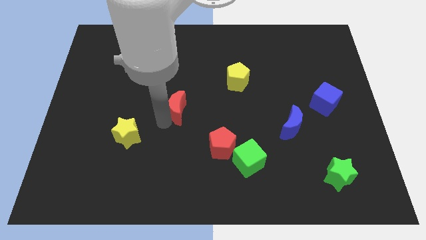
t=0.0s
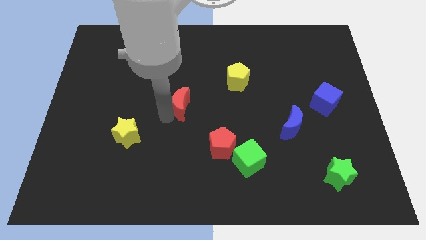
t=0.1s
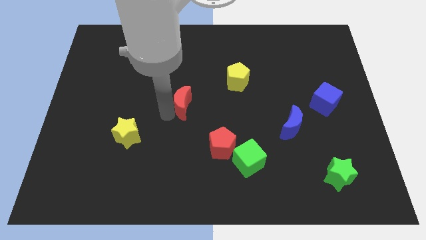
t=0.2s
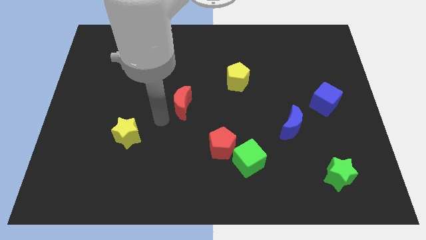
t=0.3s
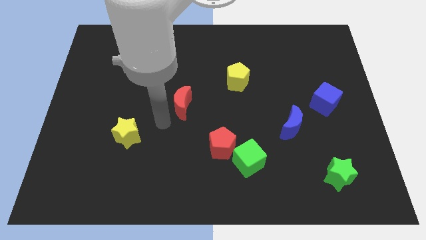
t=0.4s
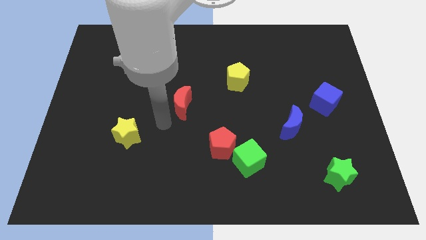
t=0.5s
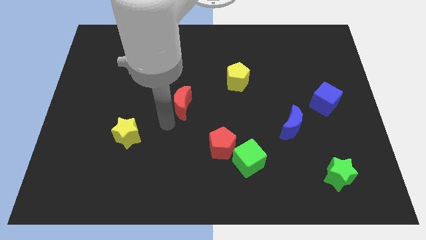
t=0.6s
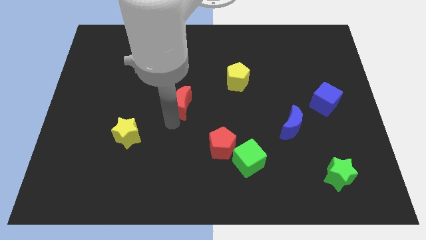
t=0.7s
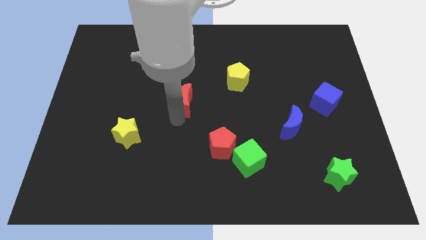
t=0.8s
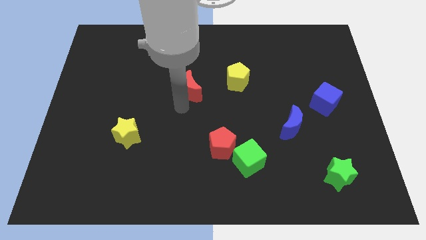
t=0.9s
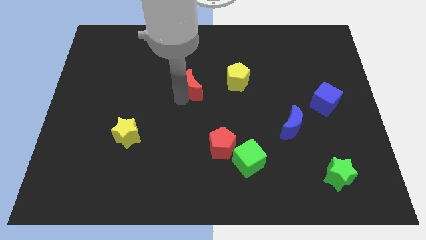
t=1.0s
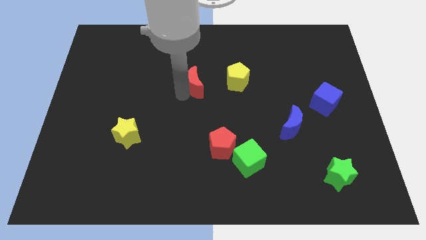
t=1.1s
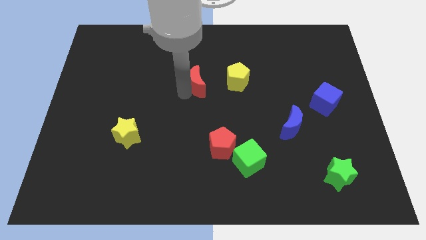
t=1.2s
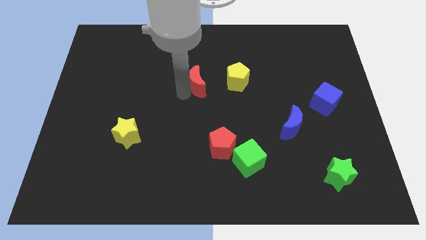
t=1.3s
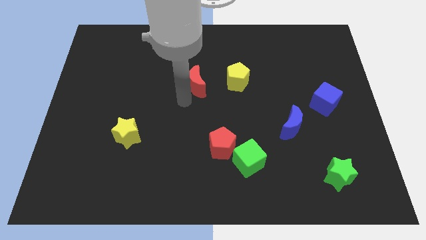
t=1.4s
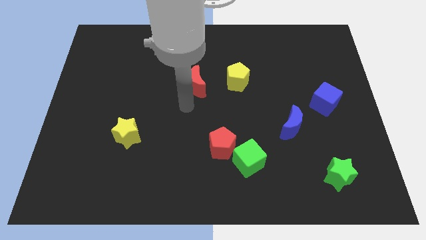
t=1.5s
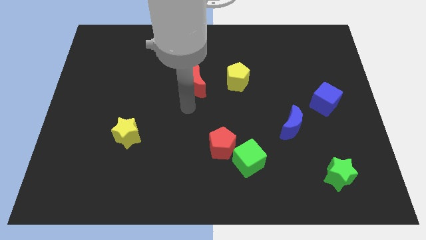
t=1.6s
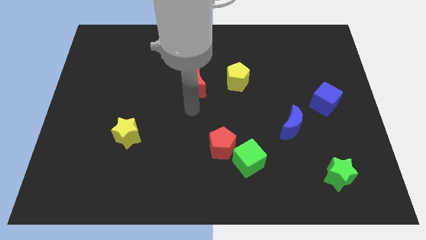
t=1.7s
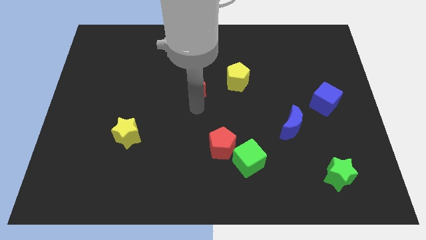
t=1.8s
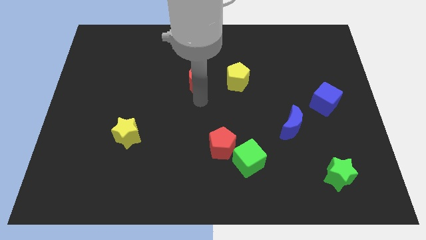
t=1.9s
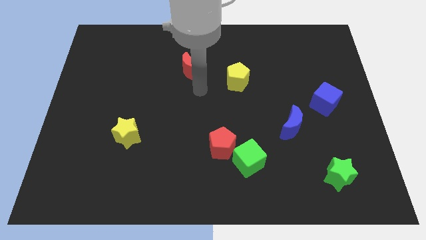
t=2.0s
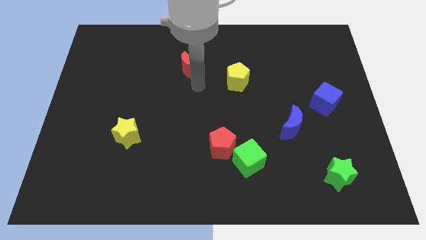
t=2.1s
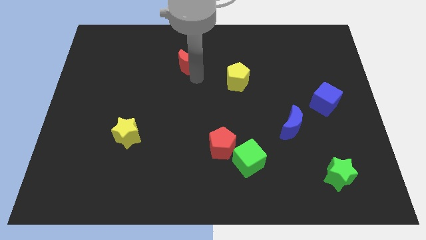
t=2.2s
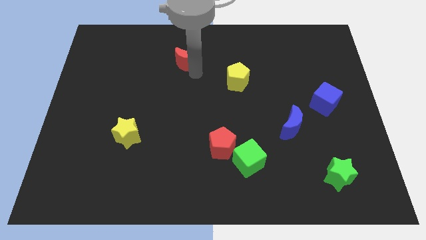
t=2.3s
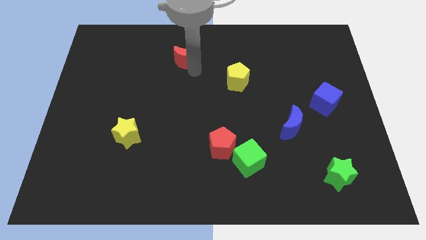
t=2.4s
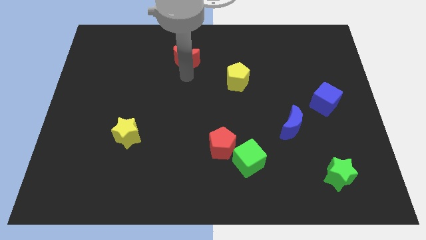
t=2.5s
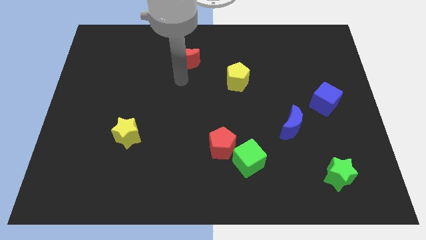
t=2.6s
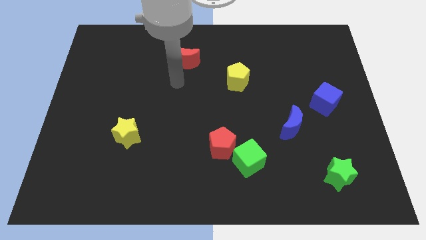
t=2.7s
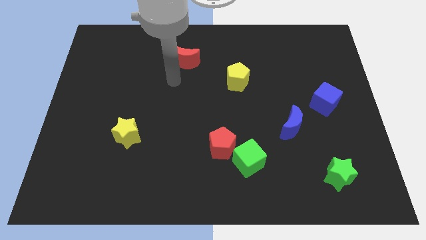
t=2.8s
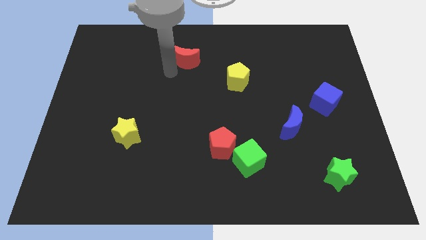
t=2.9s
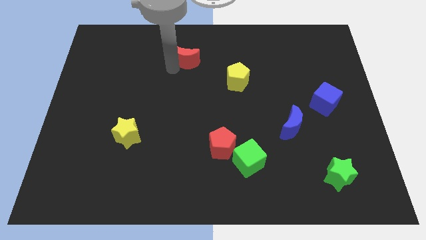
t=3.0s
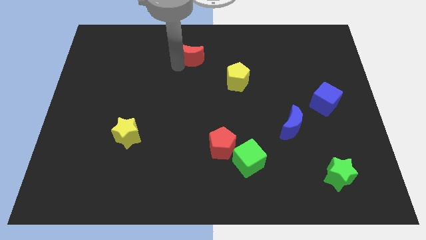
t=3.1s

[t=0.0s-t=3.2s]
move the red crescent diagonally on the top left side of the yellow pentagon

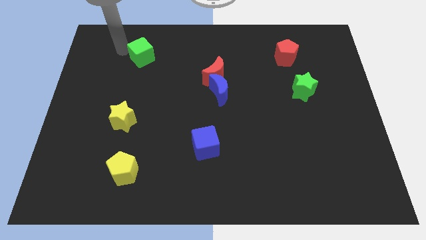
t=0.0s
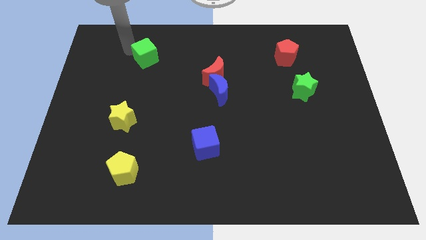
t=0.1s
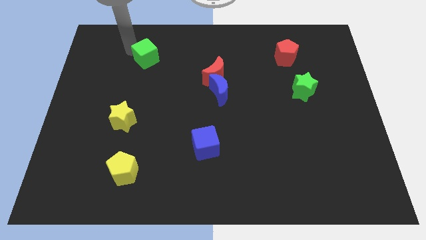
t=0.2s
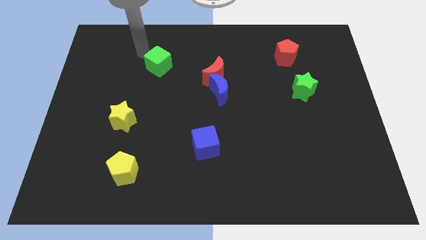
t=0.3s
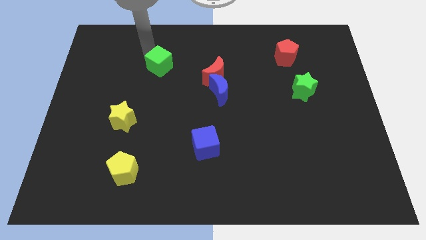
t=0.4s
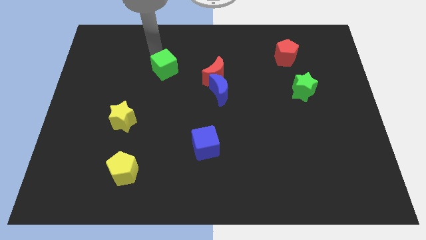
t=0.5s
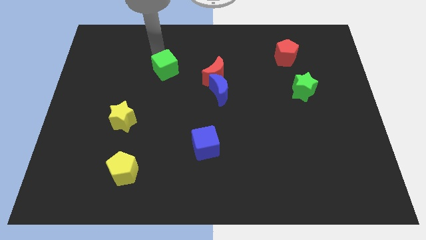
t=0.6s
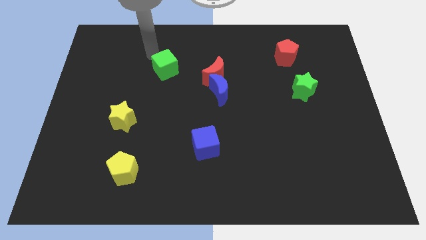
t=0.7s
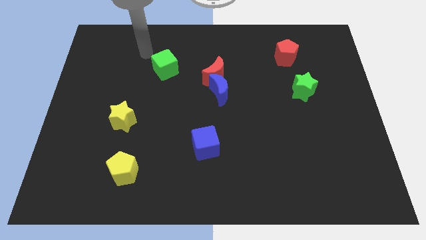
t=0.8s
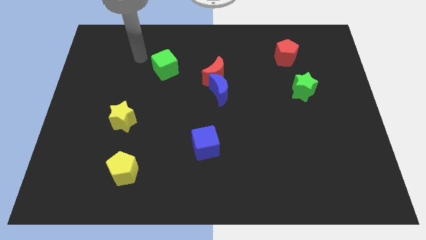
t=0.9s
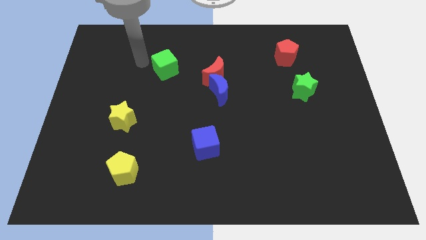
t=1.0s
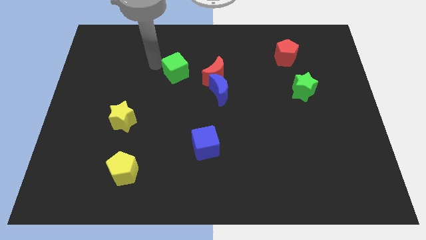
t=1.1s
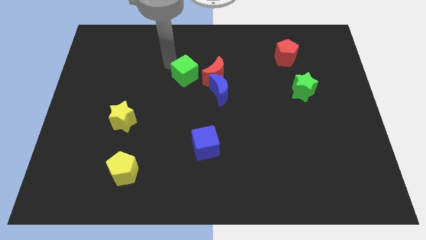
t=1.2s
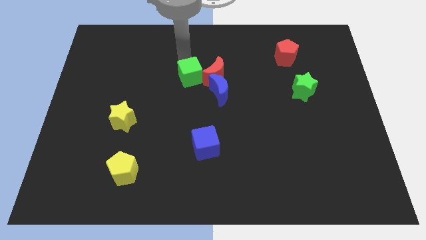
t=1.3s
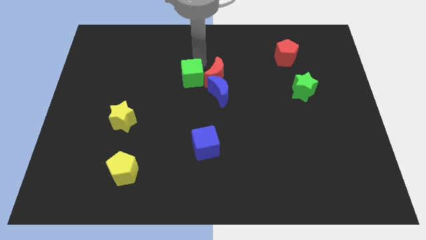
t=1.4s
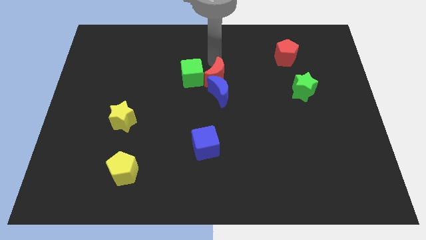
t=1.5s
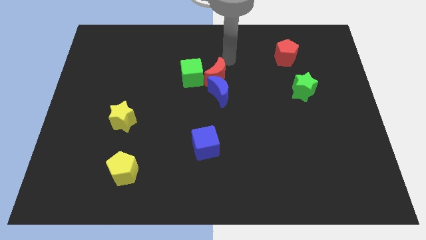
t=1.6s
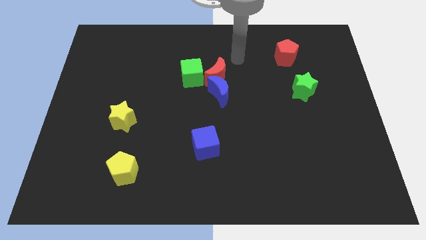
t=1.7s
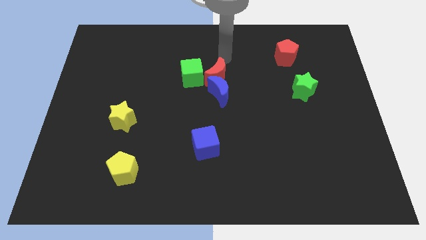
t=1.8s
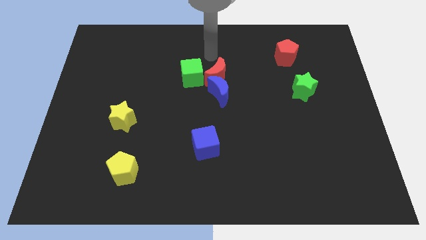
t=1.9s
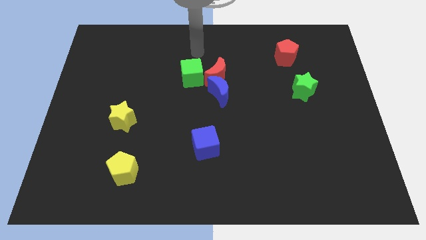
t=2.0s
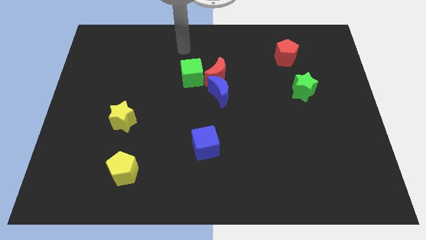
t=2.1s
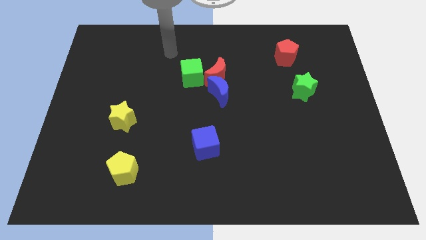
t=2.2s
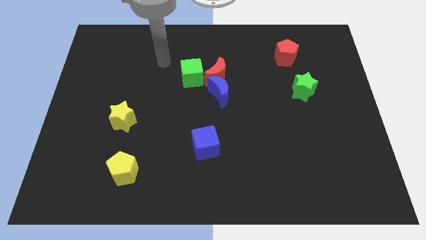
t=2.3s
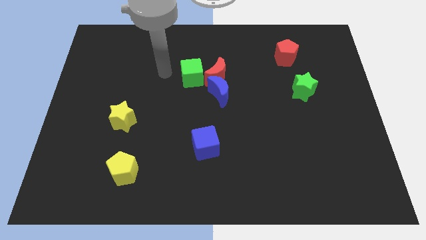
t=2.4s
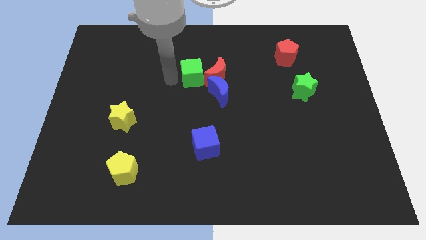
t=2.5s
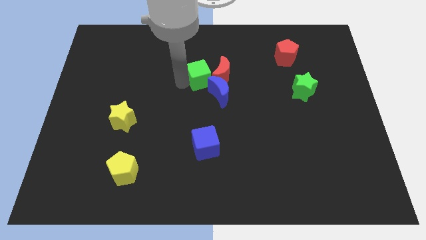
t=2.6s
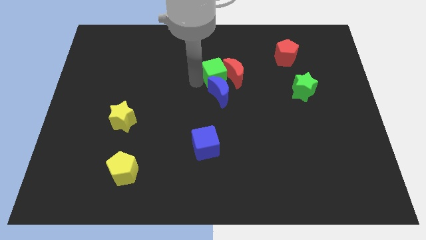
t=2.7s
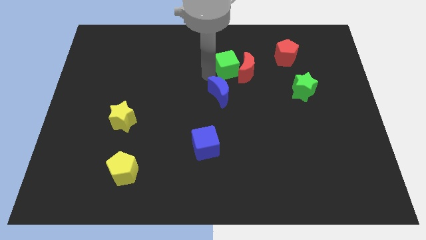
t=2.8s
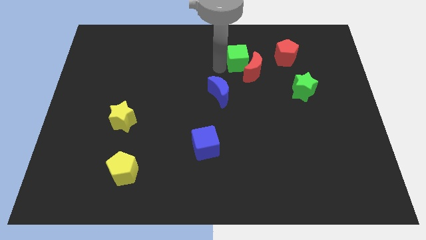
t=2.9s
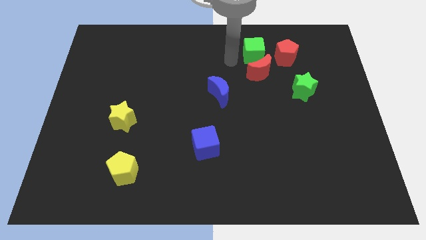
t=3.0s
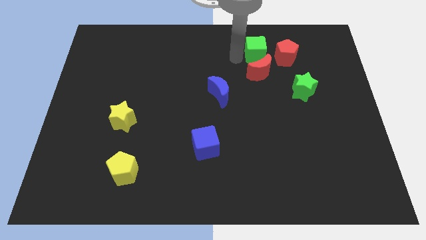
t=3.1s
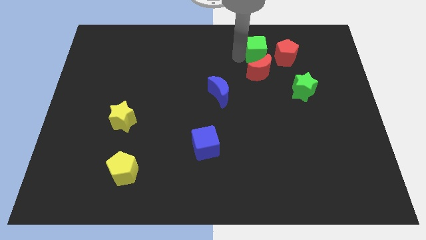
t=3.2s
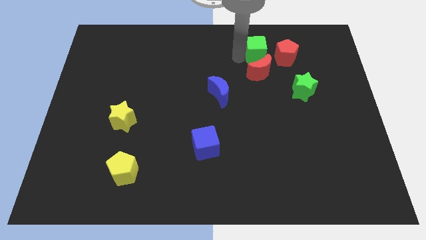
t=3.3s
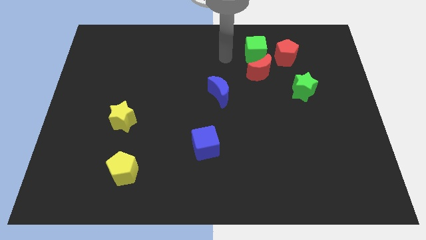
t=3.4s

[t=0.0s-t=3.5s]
move the green cube into the red moon

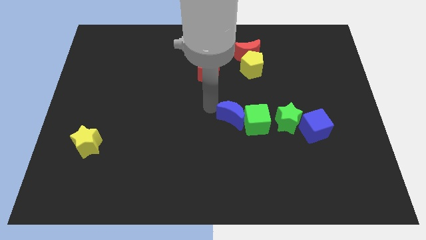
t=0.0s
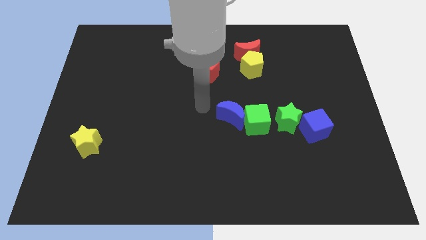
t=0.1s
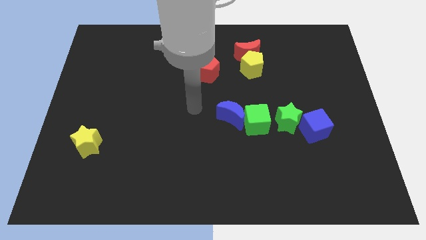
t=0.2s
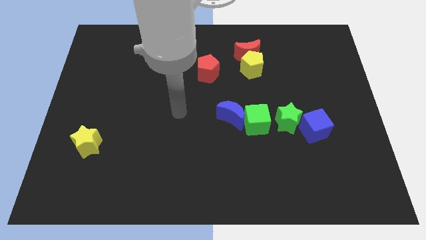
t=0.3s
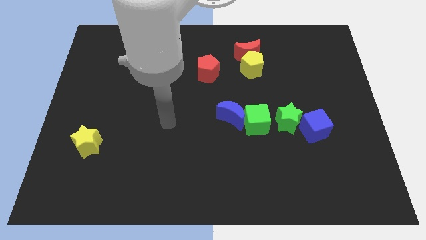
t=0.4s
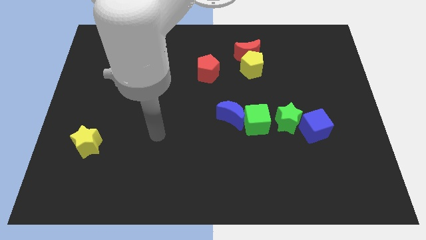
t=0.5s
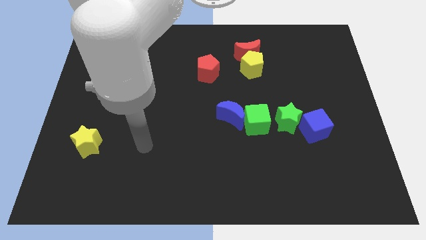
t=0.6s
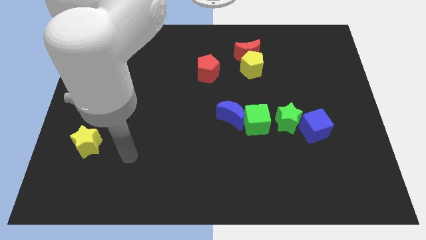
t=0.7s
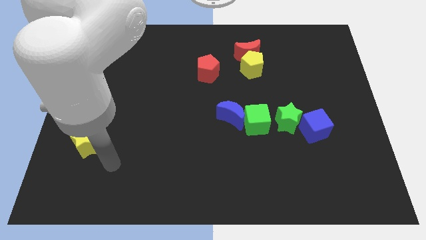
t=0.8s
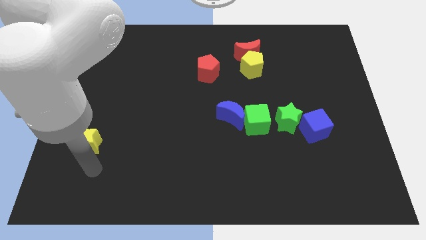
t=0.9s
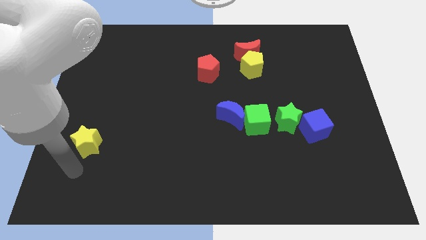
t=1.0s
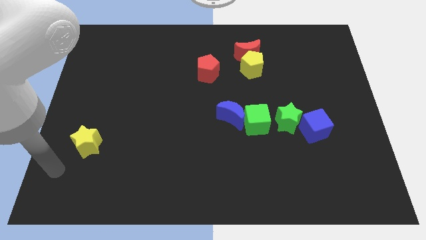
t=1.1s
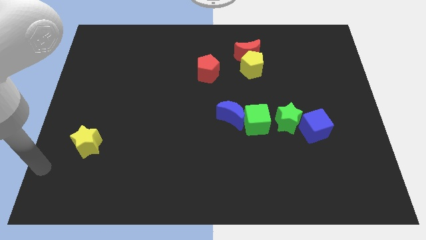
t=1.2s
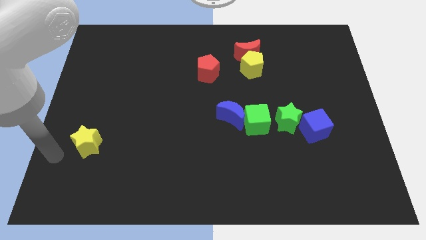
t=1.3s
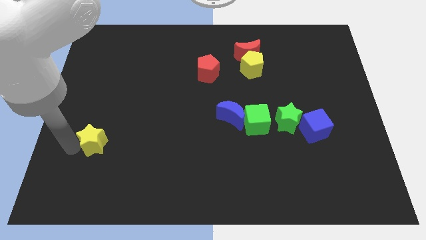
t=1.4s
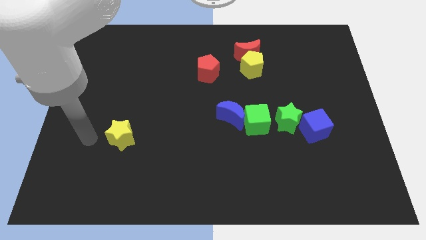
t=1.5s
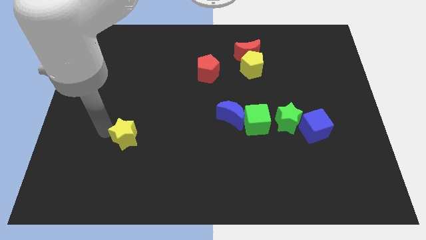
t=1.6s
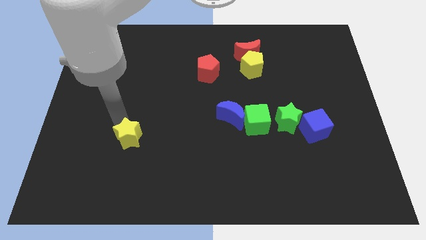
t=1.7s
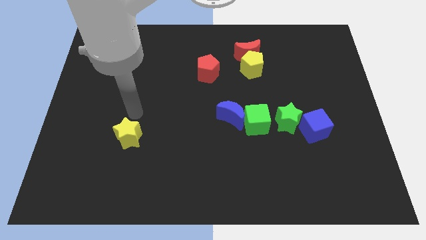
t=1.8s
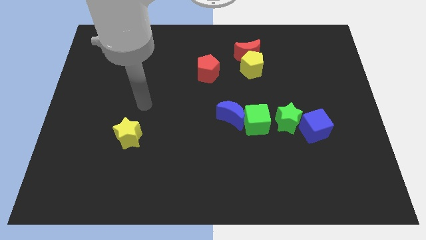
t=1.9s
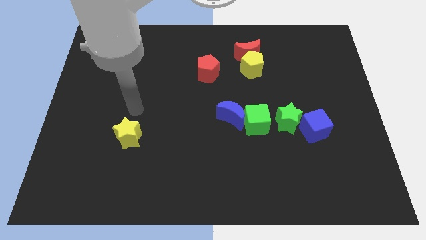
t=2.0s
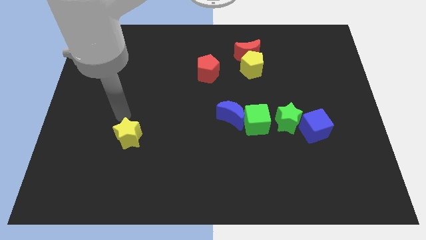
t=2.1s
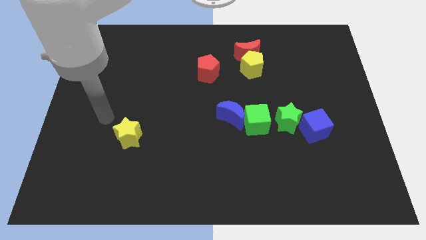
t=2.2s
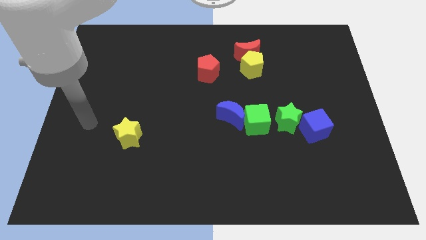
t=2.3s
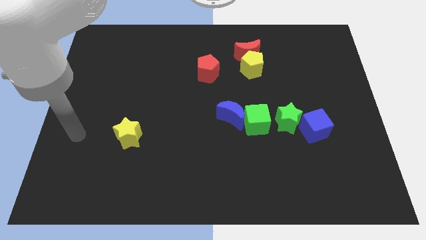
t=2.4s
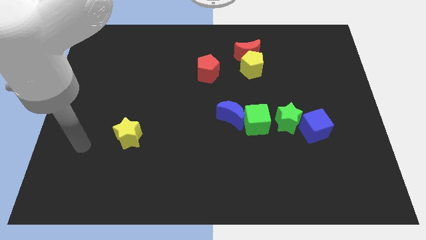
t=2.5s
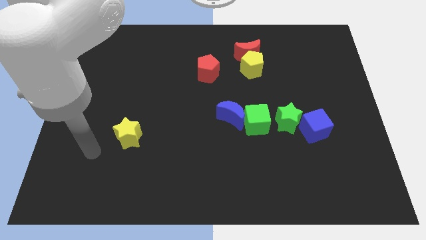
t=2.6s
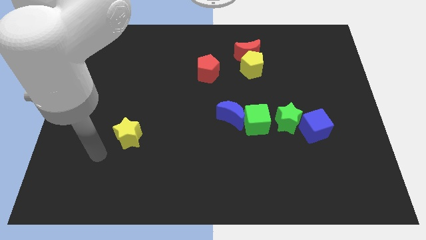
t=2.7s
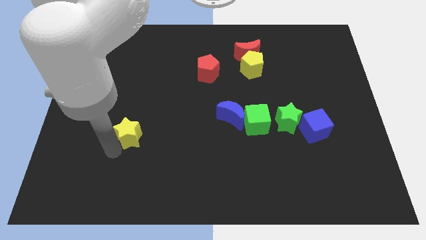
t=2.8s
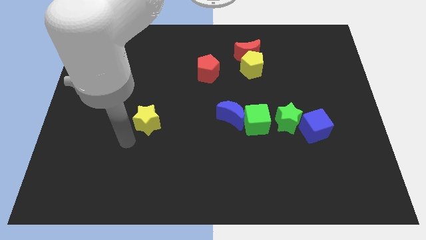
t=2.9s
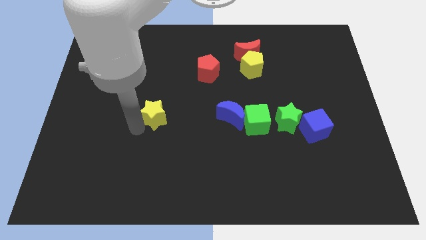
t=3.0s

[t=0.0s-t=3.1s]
move the yellow star parallel to the blue moon
